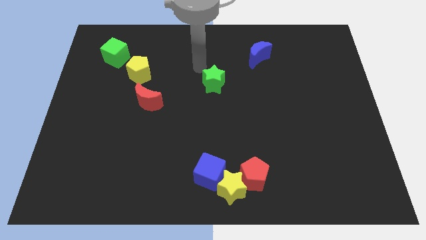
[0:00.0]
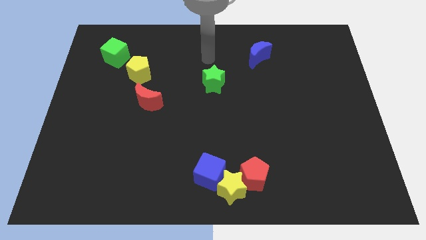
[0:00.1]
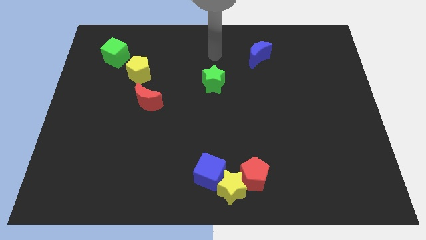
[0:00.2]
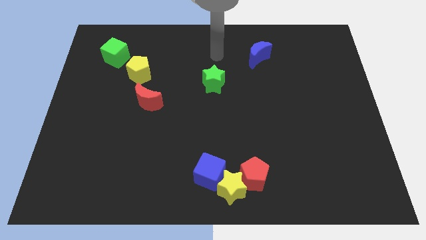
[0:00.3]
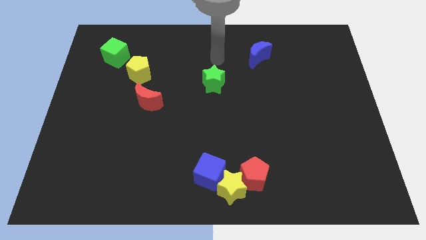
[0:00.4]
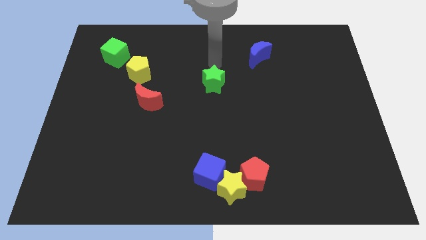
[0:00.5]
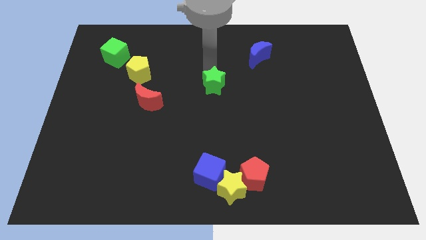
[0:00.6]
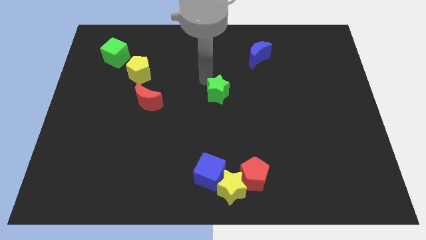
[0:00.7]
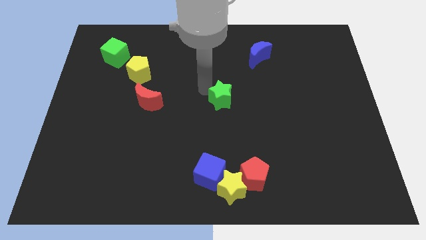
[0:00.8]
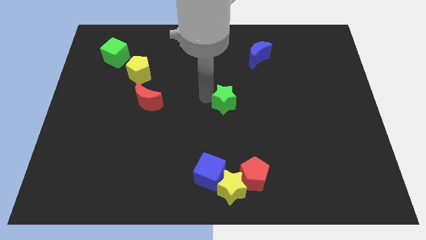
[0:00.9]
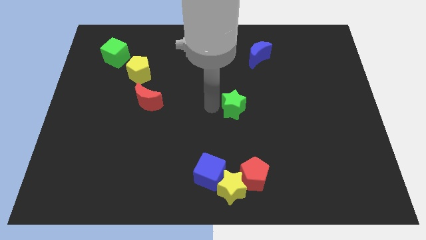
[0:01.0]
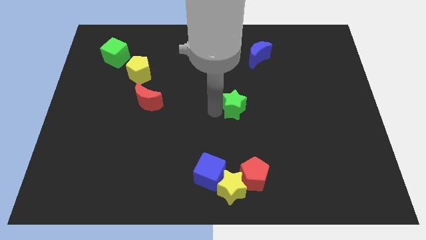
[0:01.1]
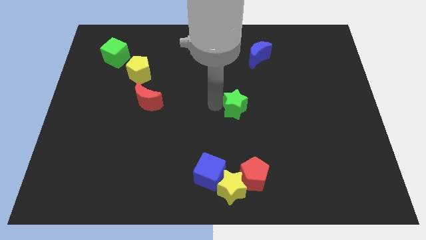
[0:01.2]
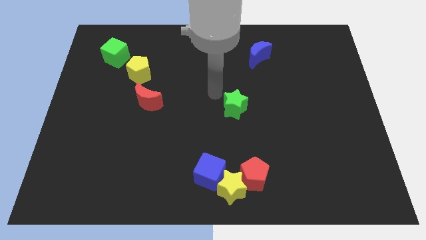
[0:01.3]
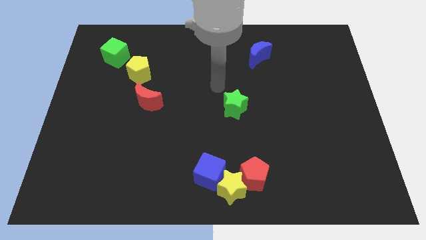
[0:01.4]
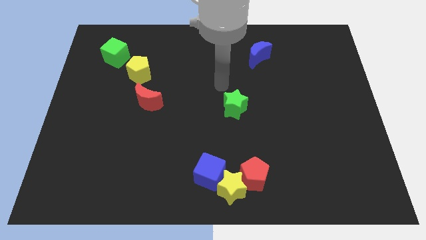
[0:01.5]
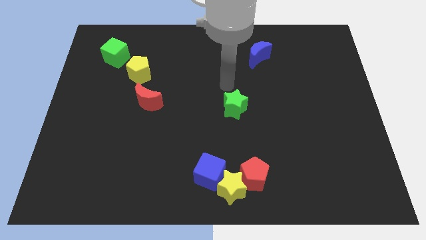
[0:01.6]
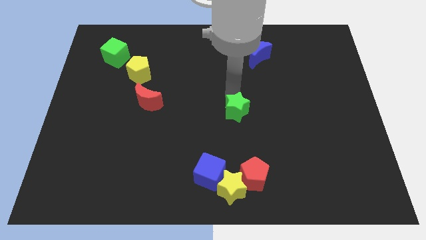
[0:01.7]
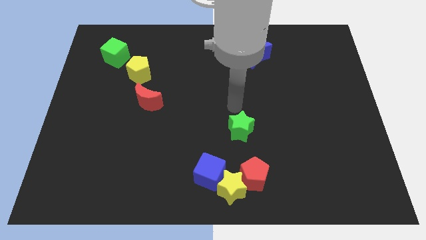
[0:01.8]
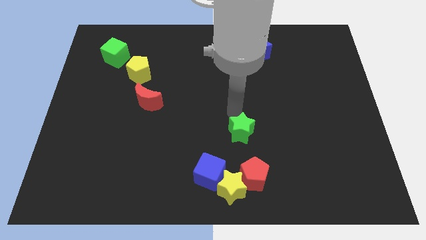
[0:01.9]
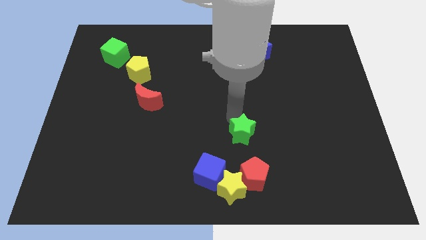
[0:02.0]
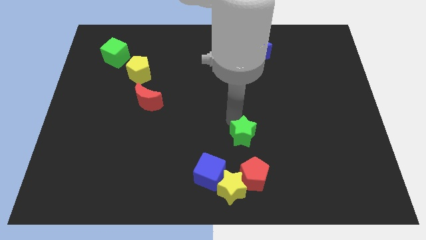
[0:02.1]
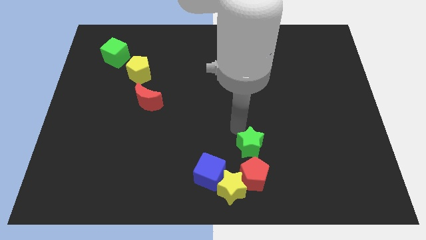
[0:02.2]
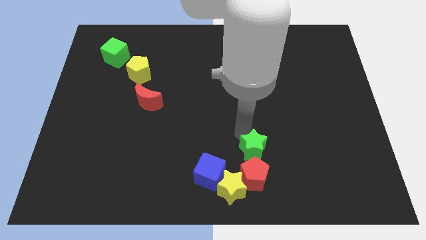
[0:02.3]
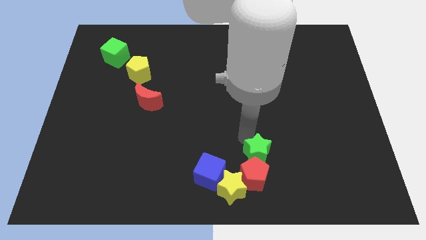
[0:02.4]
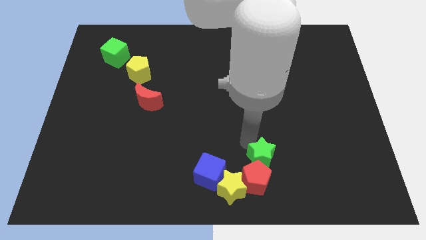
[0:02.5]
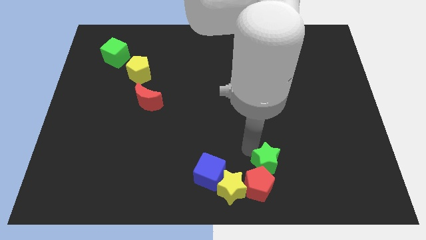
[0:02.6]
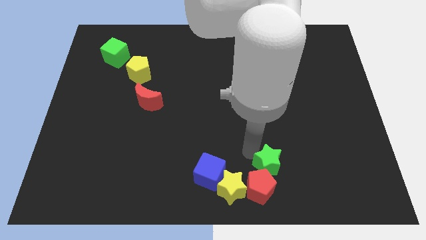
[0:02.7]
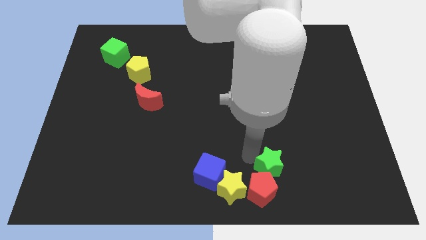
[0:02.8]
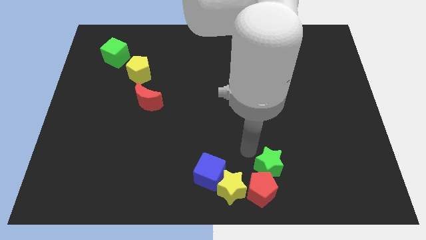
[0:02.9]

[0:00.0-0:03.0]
push the green star into the red pentagon

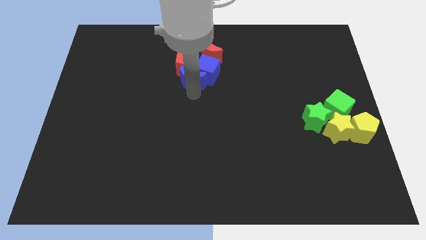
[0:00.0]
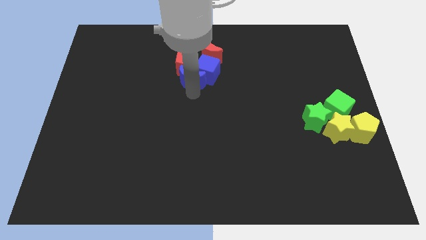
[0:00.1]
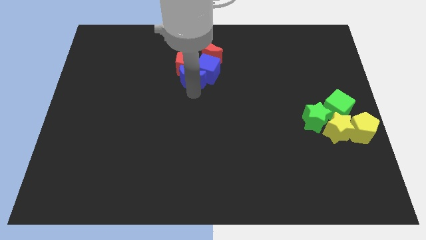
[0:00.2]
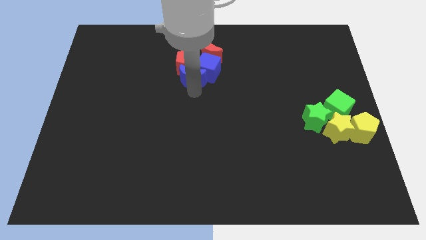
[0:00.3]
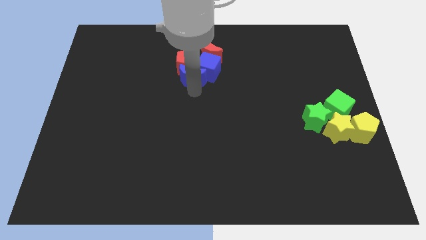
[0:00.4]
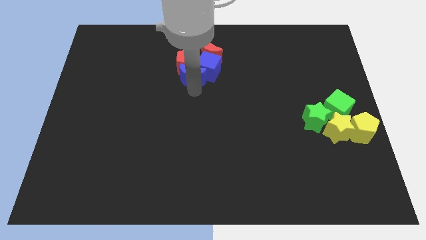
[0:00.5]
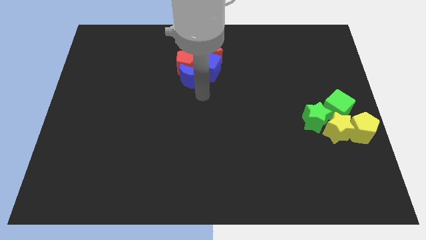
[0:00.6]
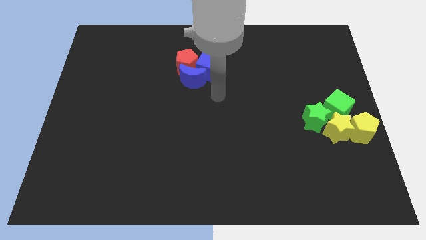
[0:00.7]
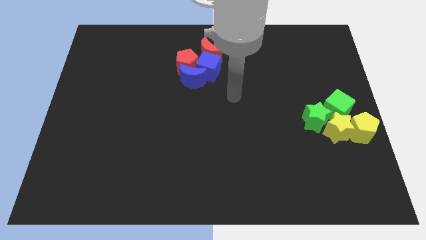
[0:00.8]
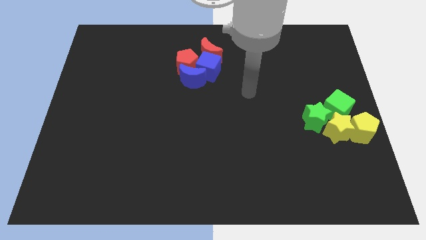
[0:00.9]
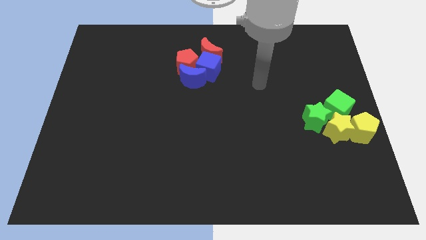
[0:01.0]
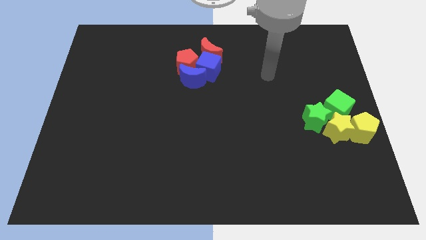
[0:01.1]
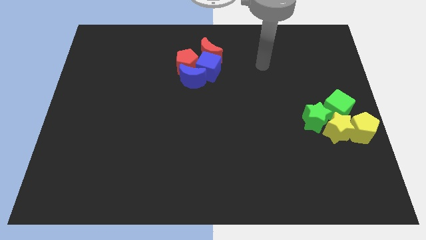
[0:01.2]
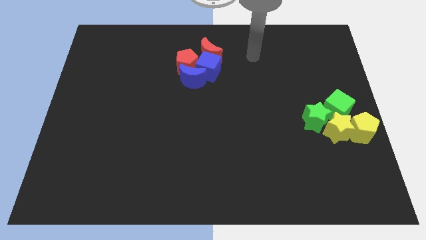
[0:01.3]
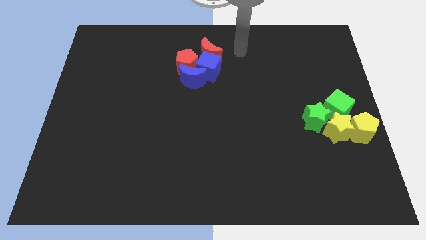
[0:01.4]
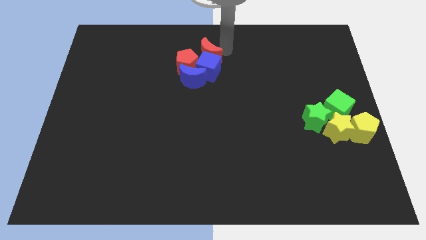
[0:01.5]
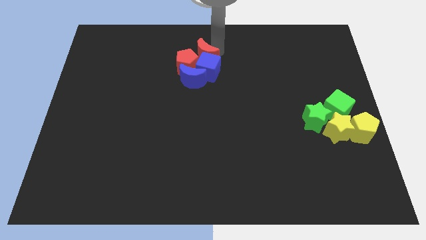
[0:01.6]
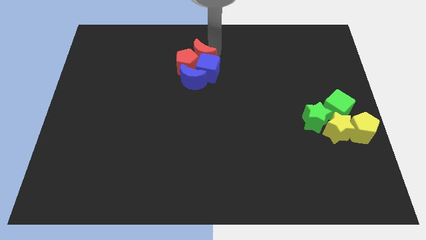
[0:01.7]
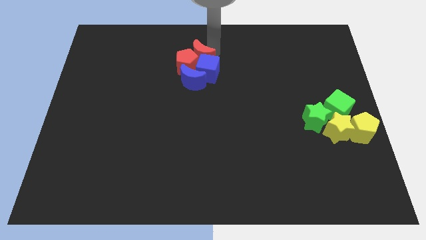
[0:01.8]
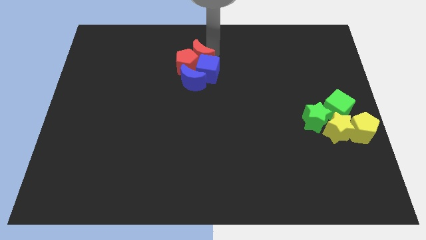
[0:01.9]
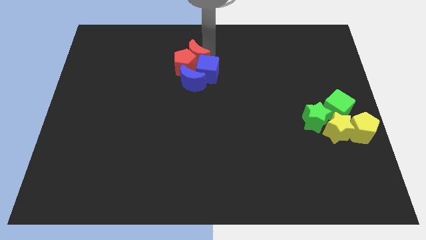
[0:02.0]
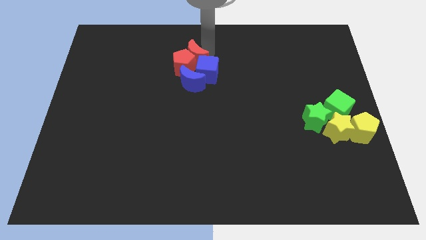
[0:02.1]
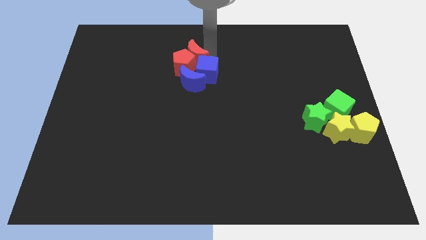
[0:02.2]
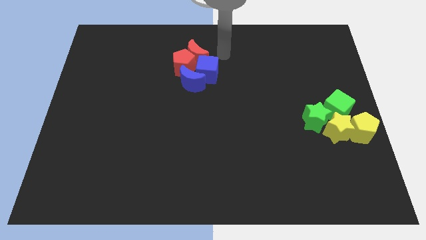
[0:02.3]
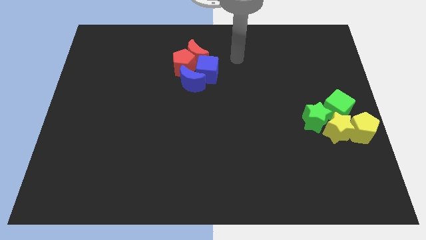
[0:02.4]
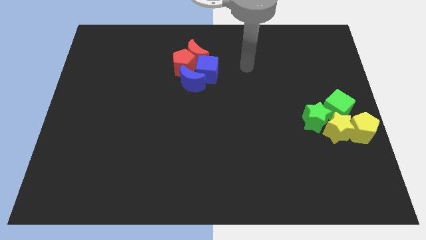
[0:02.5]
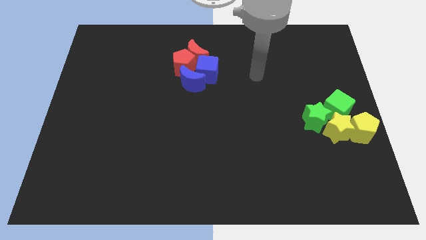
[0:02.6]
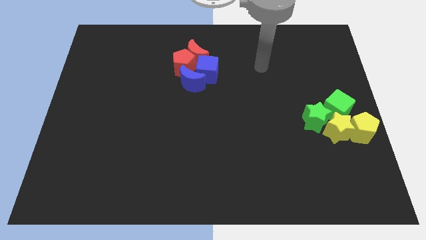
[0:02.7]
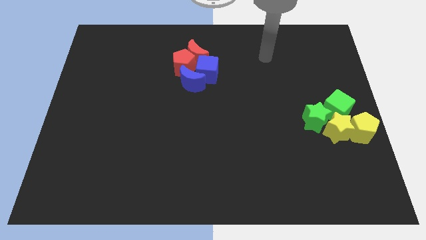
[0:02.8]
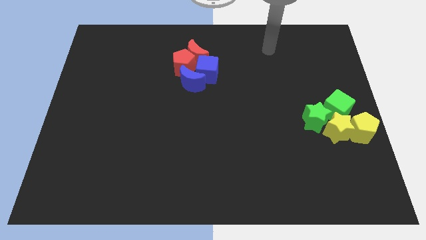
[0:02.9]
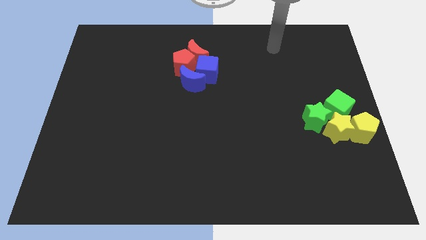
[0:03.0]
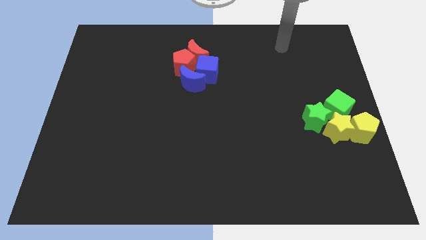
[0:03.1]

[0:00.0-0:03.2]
move the red crescent into the red pentagon

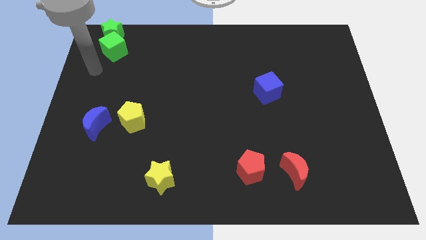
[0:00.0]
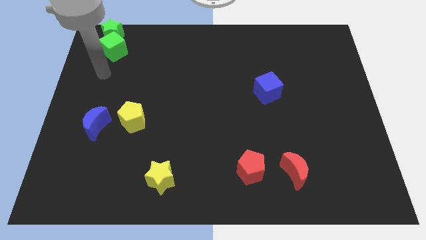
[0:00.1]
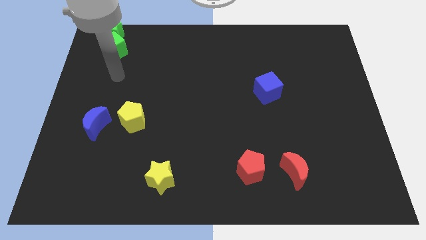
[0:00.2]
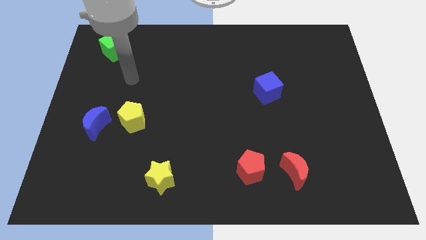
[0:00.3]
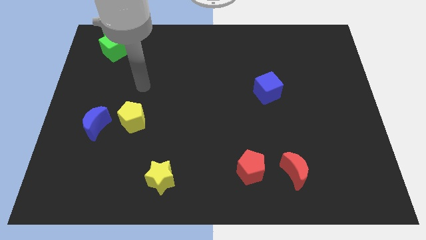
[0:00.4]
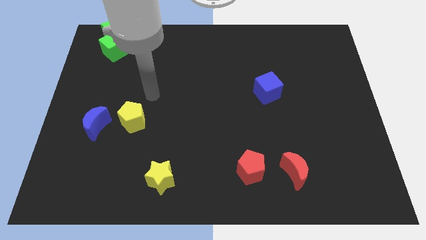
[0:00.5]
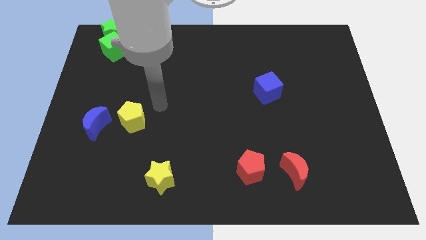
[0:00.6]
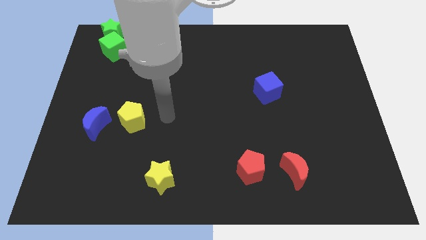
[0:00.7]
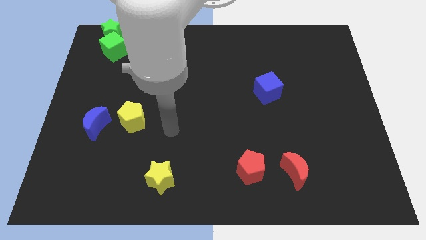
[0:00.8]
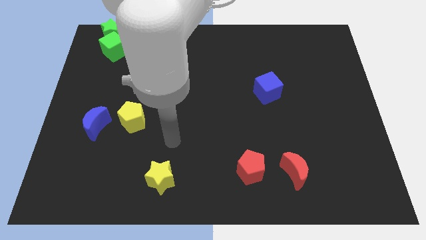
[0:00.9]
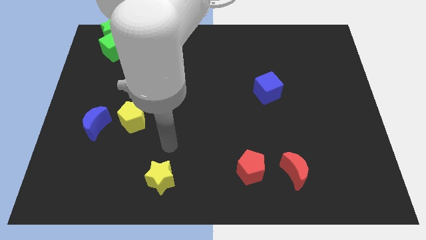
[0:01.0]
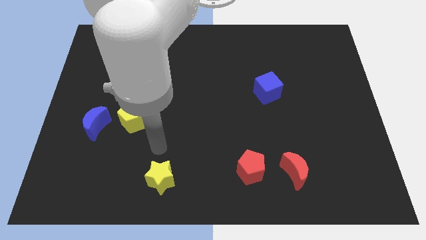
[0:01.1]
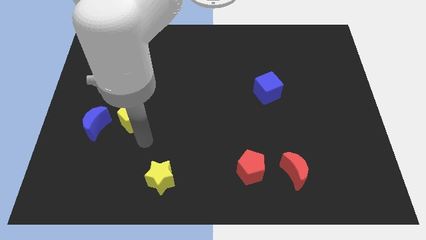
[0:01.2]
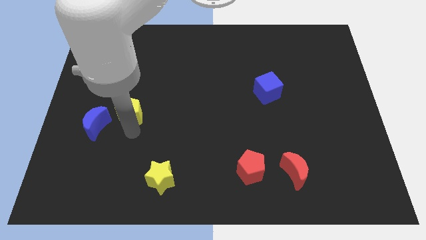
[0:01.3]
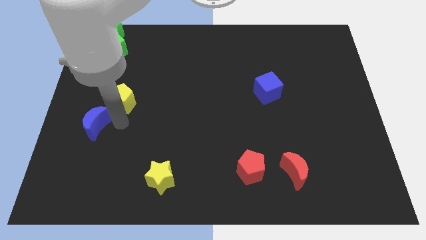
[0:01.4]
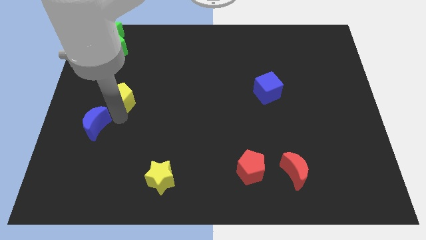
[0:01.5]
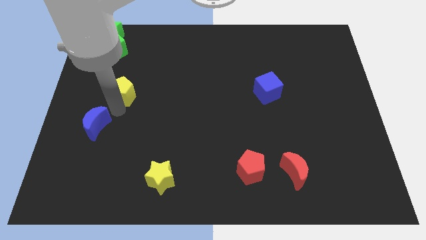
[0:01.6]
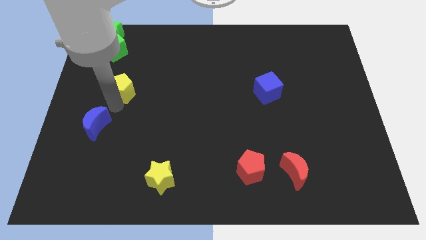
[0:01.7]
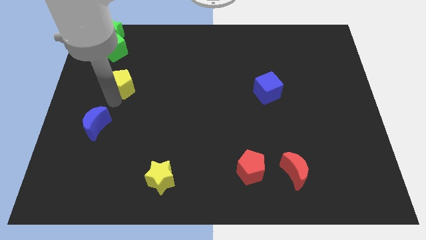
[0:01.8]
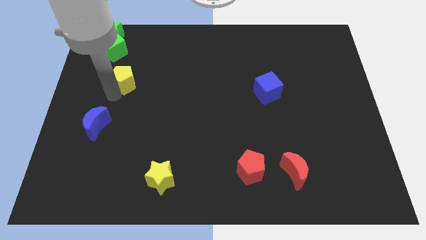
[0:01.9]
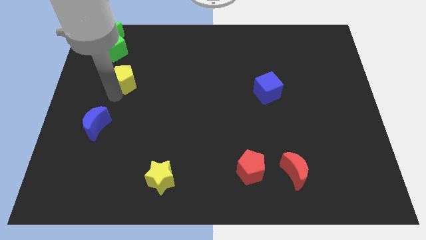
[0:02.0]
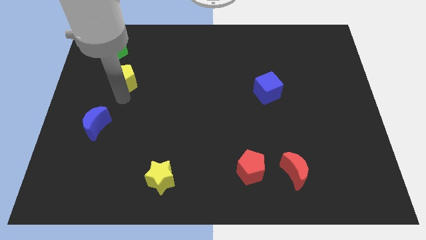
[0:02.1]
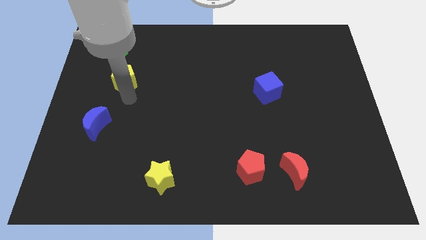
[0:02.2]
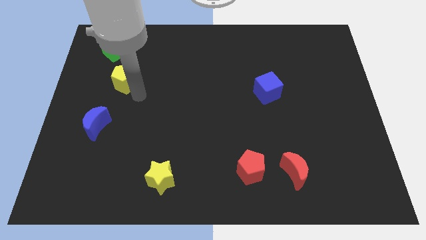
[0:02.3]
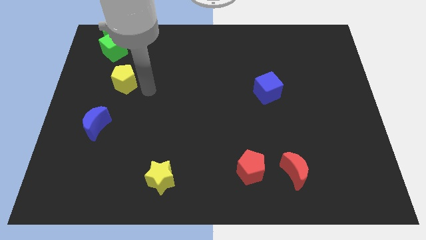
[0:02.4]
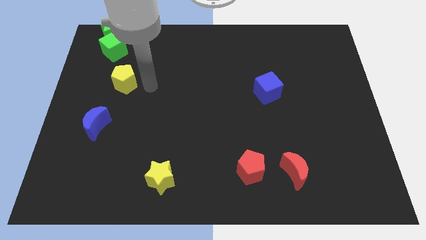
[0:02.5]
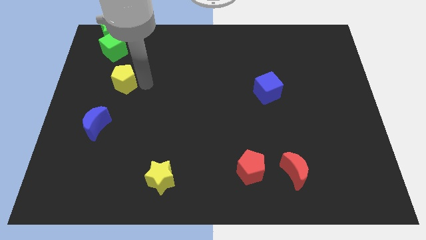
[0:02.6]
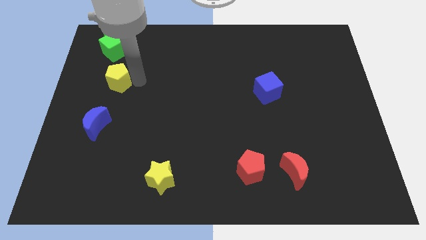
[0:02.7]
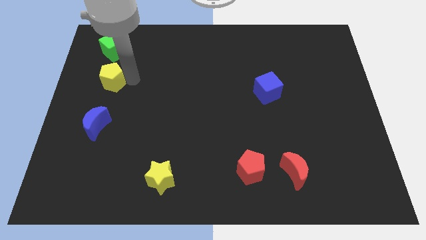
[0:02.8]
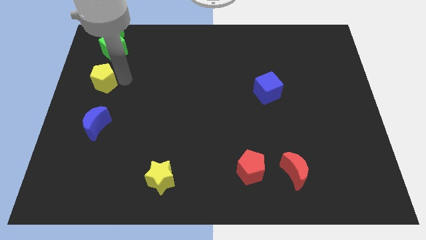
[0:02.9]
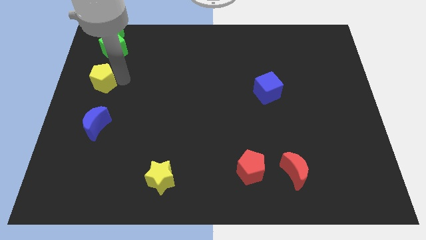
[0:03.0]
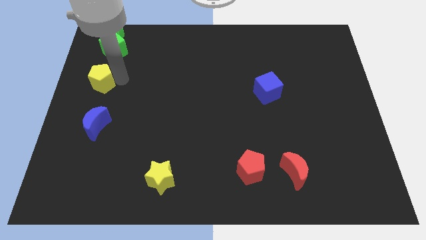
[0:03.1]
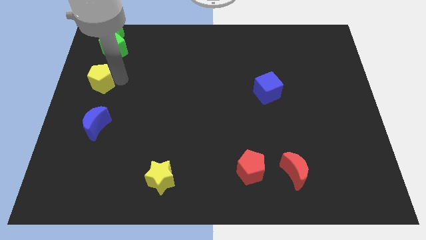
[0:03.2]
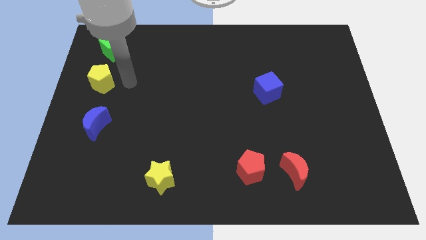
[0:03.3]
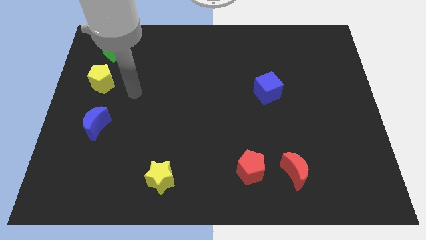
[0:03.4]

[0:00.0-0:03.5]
place the yellow pentagon in between the green cube and blue crescent
